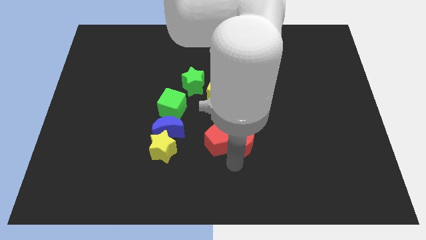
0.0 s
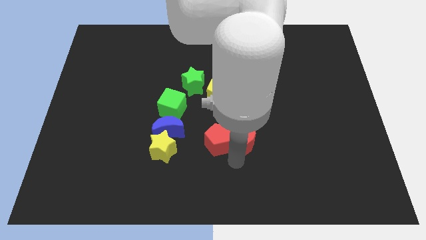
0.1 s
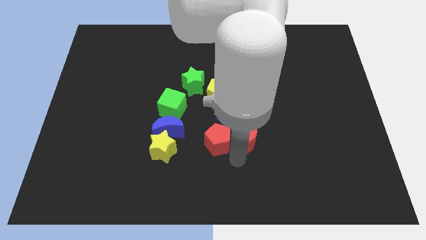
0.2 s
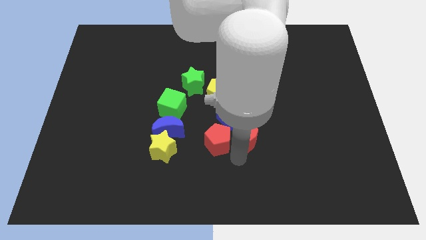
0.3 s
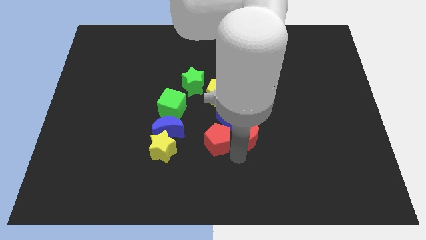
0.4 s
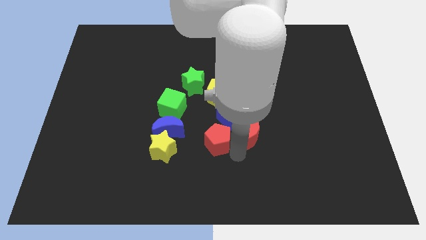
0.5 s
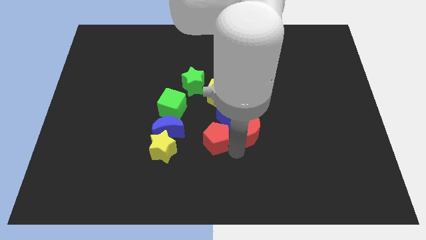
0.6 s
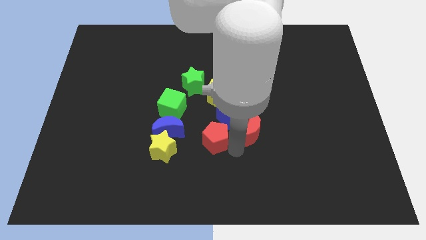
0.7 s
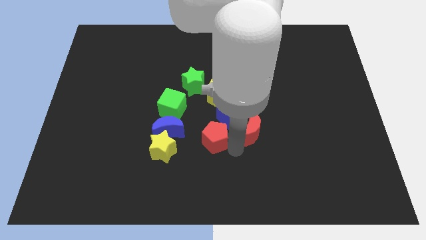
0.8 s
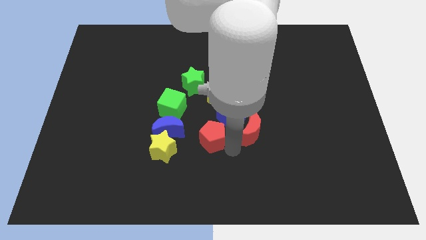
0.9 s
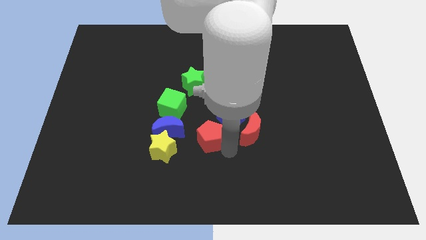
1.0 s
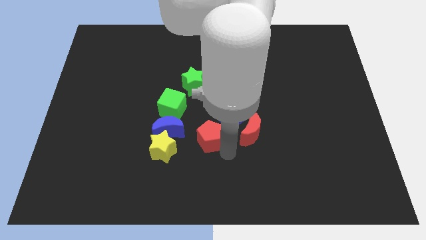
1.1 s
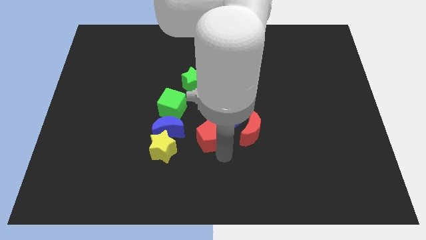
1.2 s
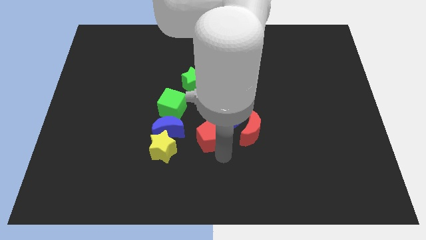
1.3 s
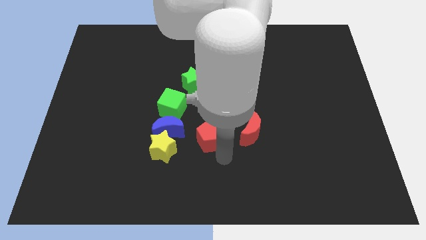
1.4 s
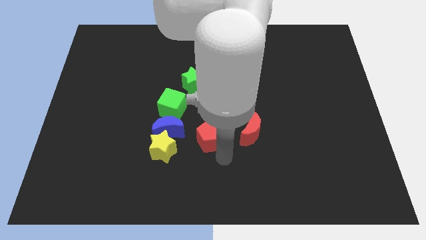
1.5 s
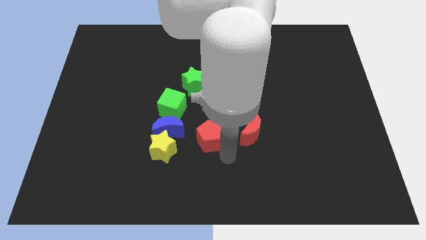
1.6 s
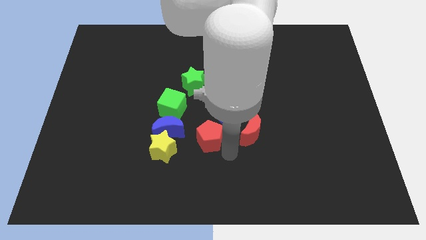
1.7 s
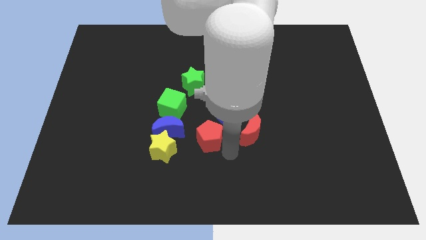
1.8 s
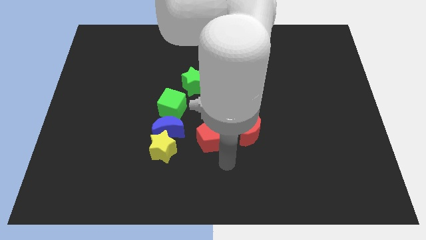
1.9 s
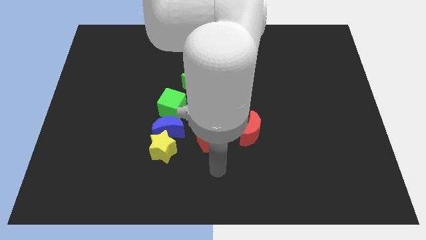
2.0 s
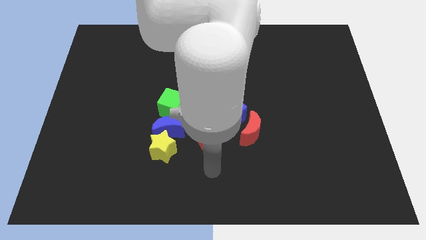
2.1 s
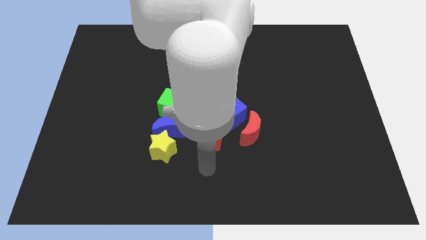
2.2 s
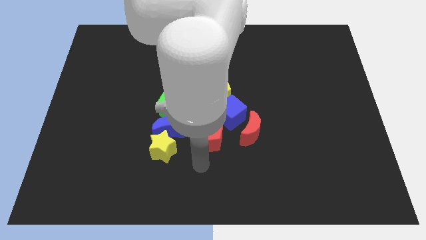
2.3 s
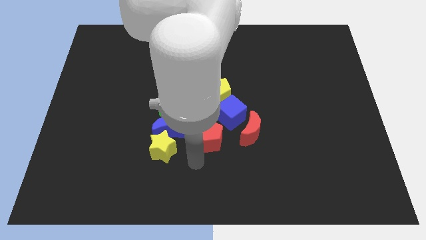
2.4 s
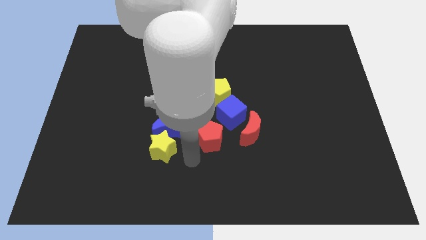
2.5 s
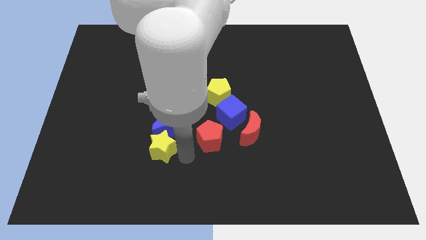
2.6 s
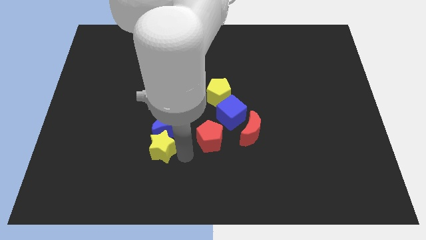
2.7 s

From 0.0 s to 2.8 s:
move the red pentagon slightly to the left

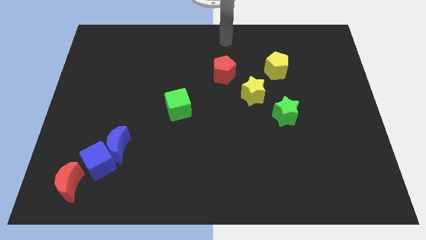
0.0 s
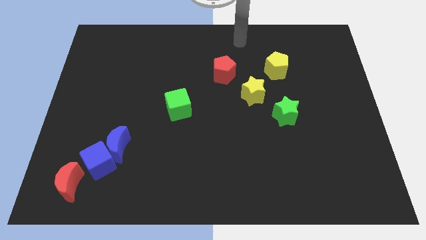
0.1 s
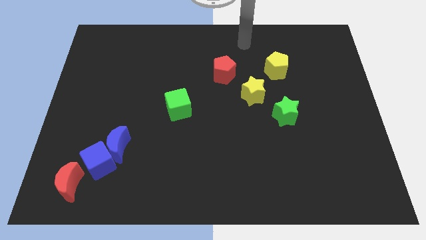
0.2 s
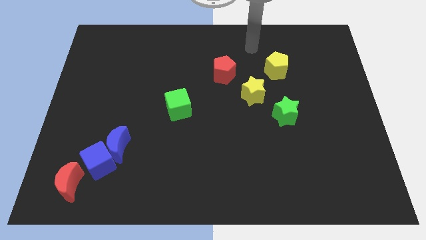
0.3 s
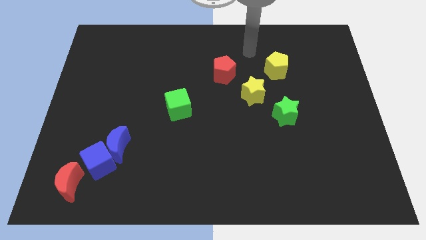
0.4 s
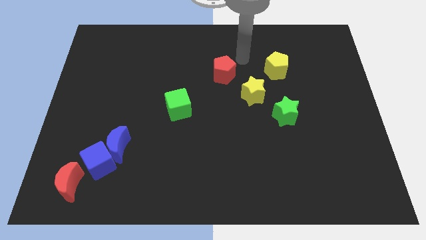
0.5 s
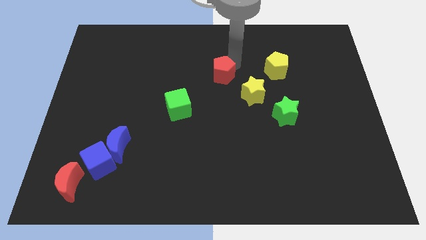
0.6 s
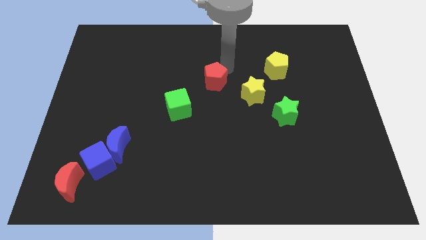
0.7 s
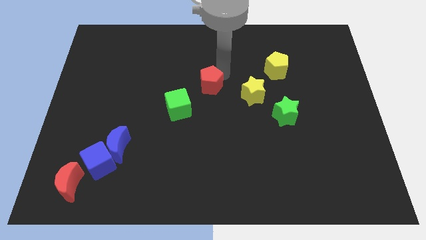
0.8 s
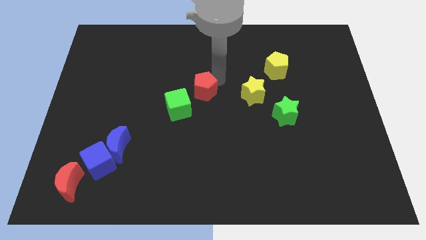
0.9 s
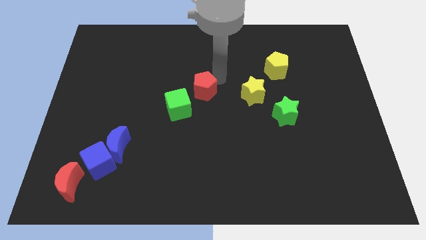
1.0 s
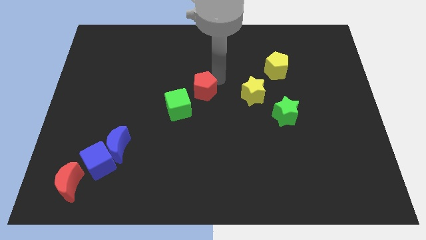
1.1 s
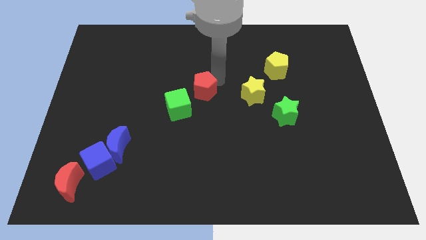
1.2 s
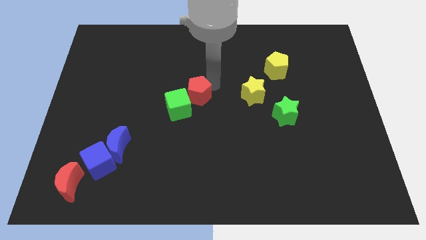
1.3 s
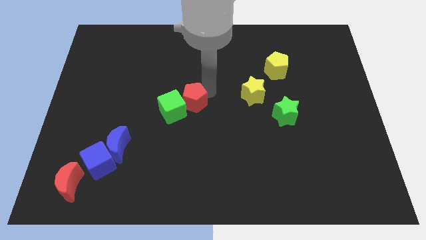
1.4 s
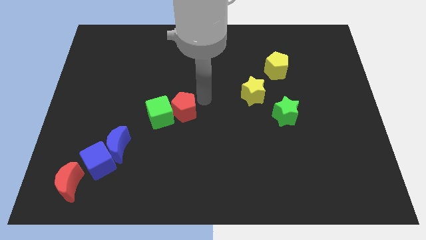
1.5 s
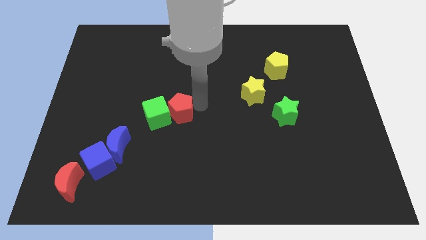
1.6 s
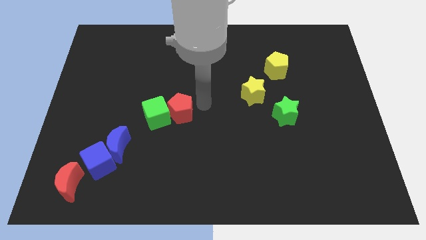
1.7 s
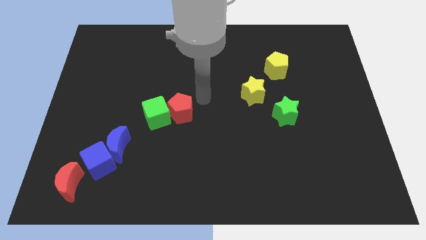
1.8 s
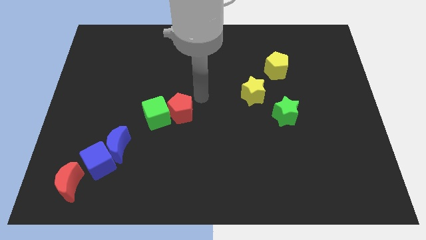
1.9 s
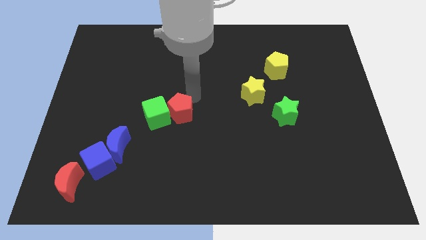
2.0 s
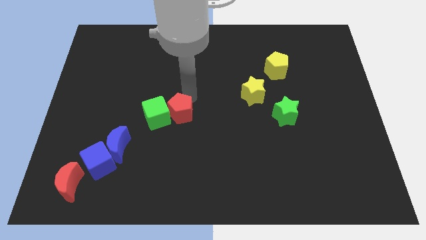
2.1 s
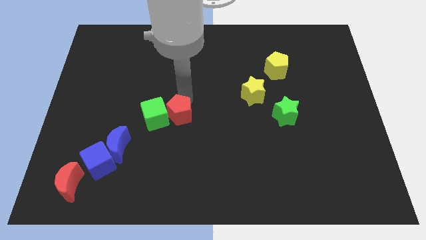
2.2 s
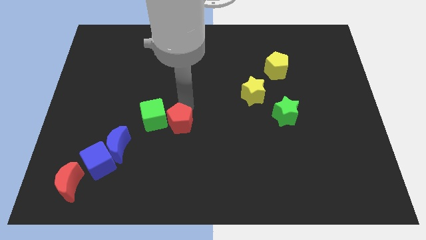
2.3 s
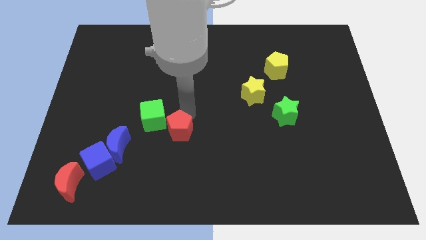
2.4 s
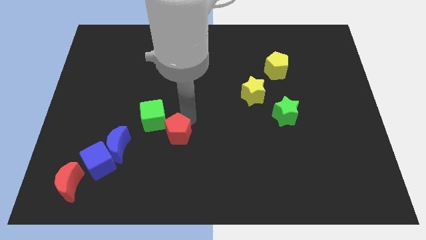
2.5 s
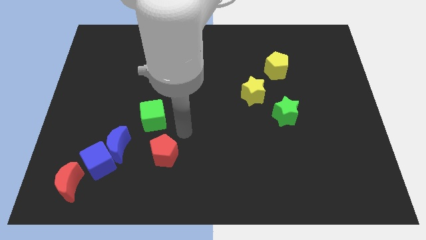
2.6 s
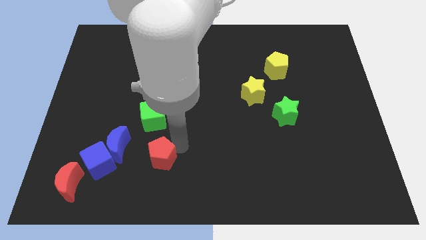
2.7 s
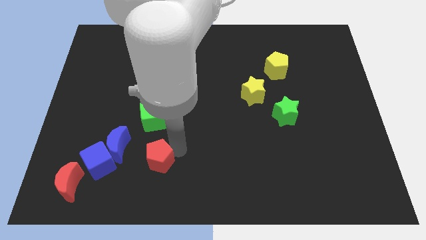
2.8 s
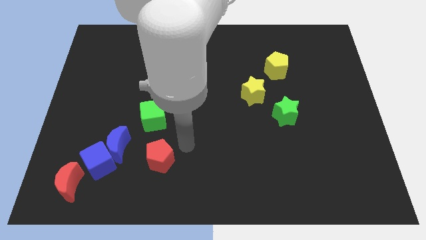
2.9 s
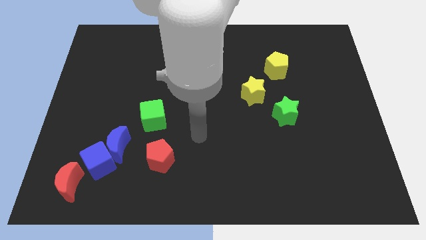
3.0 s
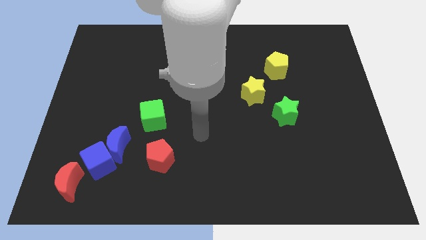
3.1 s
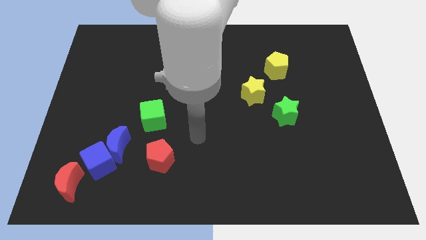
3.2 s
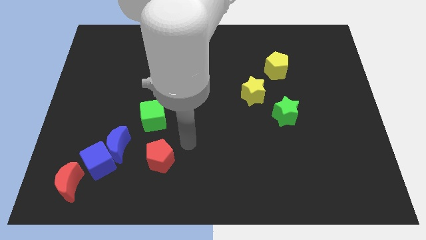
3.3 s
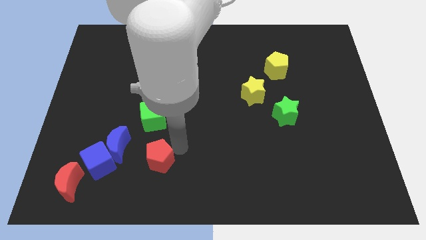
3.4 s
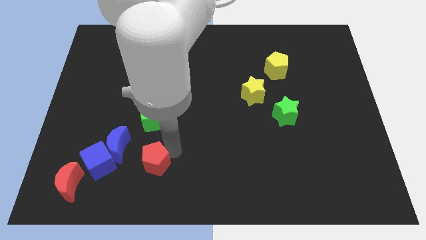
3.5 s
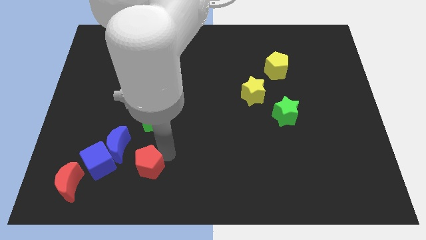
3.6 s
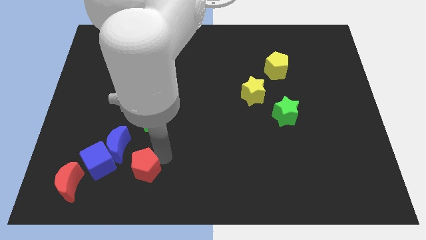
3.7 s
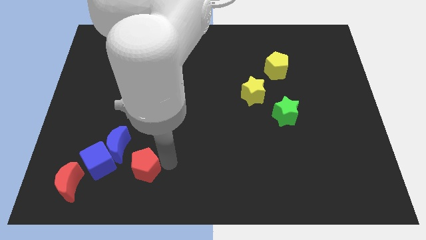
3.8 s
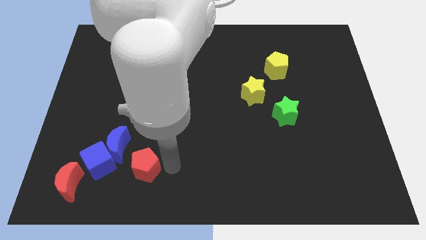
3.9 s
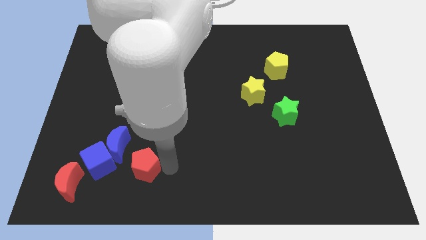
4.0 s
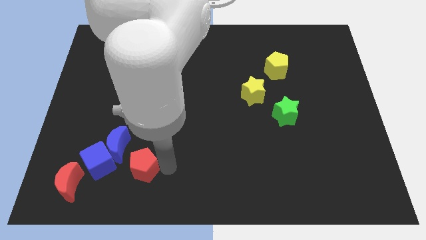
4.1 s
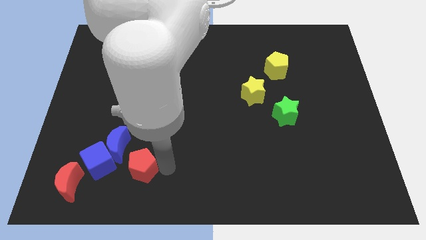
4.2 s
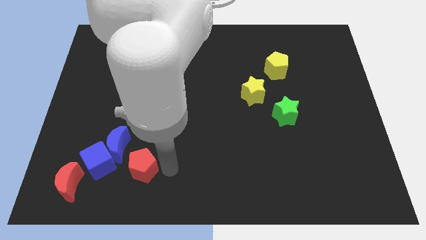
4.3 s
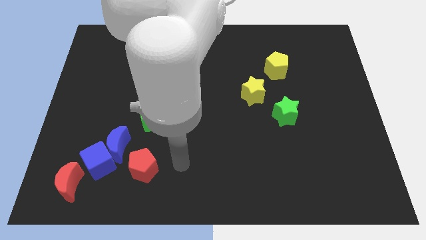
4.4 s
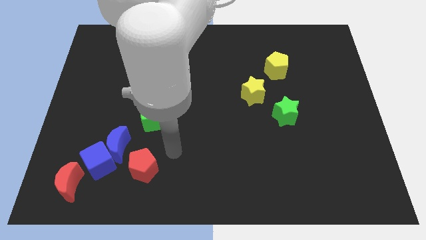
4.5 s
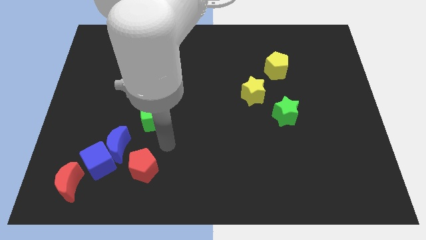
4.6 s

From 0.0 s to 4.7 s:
put the red pentagon below the green cube

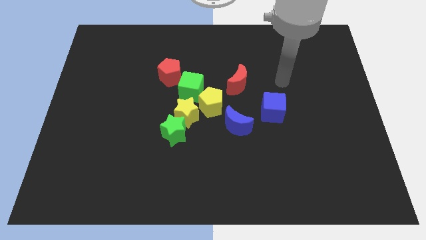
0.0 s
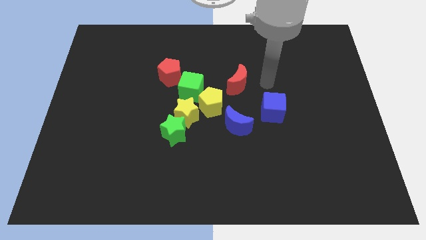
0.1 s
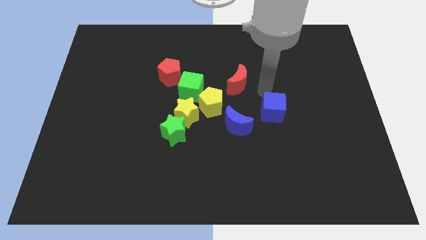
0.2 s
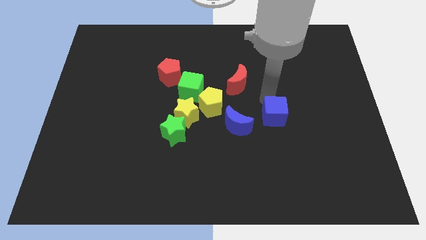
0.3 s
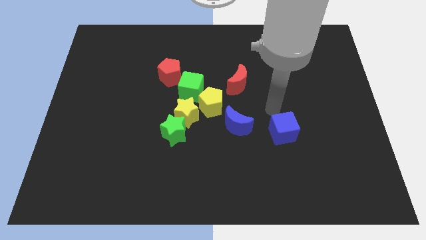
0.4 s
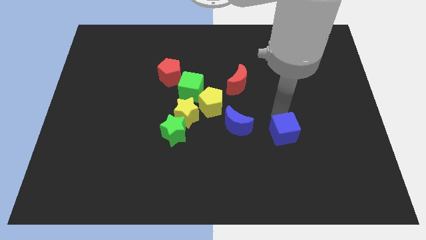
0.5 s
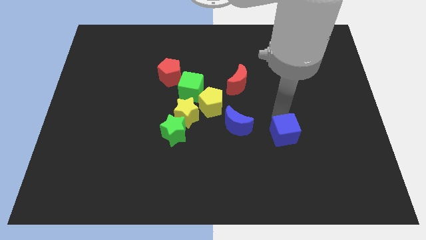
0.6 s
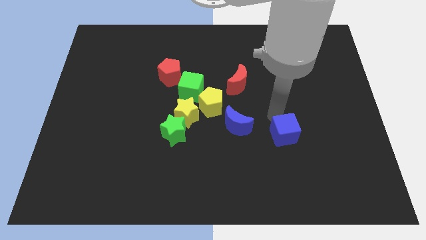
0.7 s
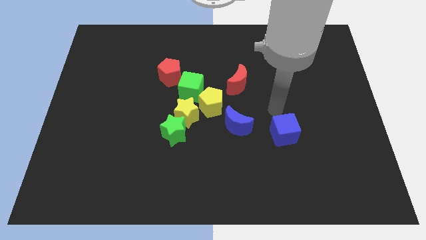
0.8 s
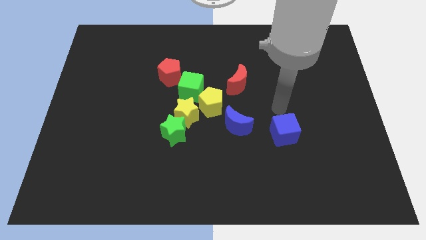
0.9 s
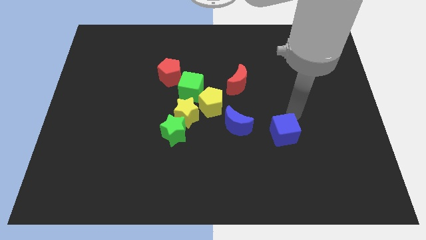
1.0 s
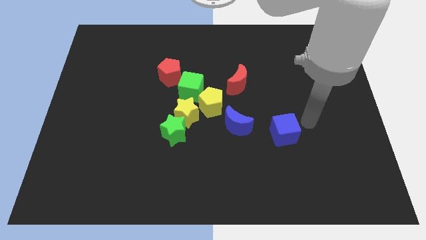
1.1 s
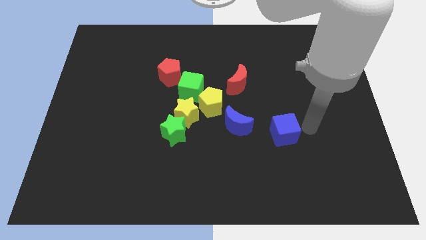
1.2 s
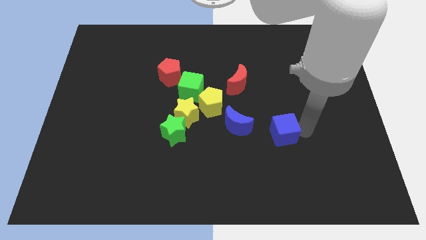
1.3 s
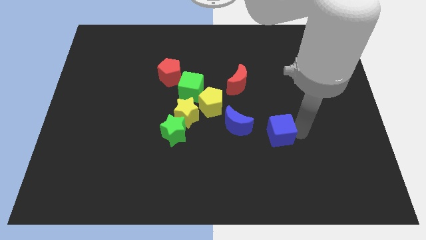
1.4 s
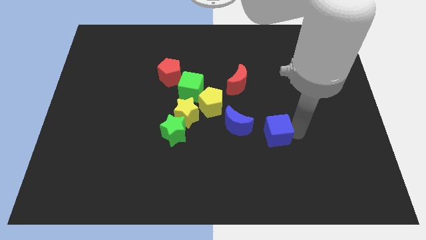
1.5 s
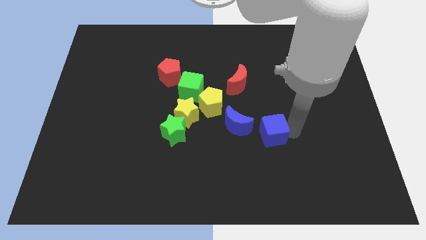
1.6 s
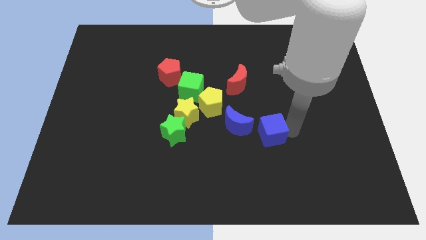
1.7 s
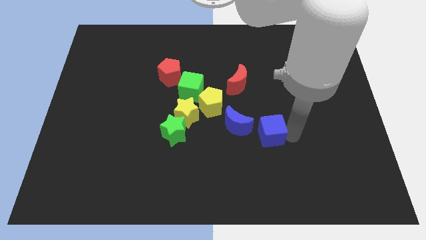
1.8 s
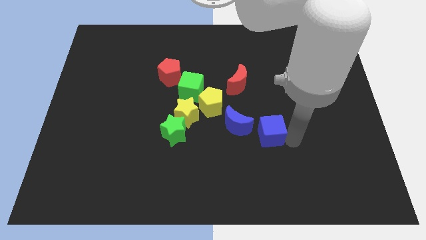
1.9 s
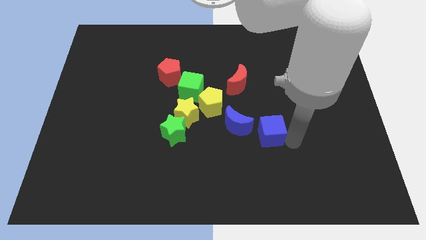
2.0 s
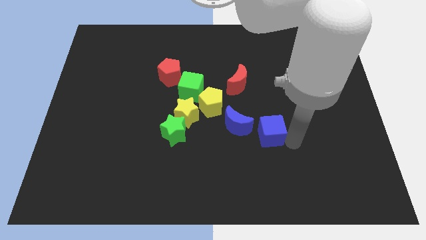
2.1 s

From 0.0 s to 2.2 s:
place blue cube to the right of the blue moon
